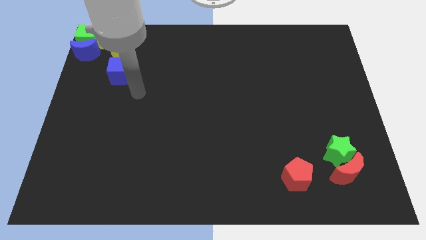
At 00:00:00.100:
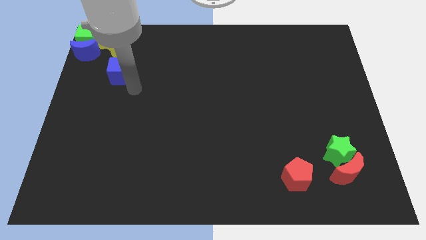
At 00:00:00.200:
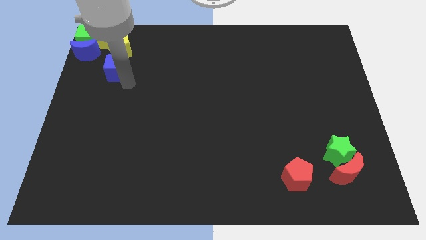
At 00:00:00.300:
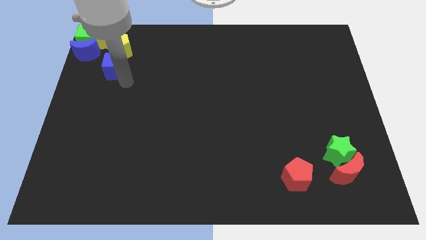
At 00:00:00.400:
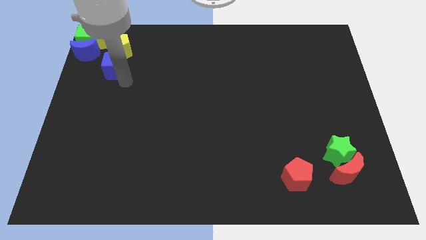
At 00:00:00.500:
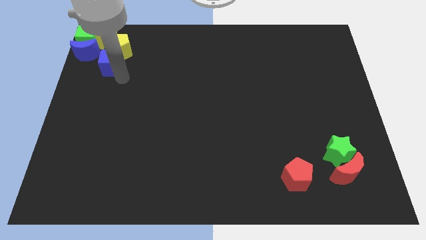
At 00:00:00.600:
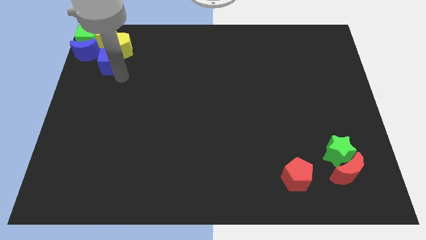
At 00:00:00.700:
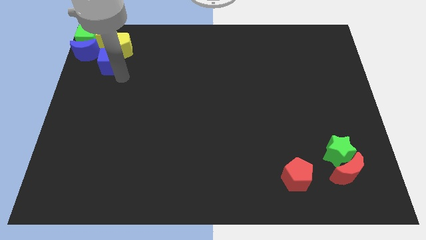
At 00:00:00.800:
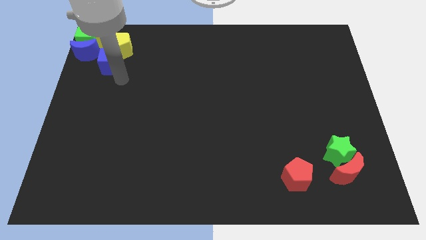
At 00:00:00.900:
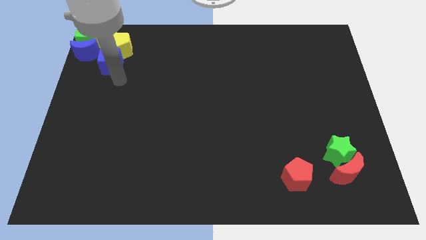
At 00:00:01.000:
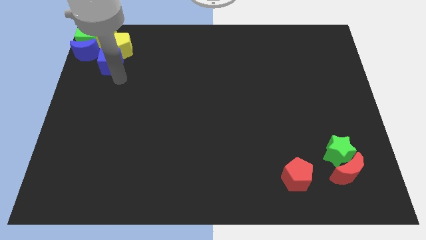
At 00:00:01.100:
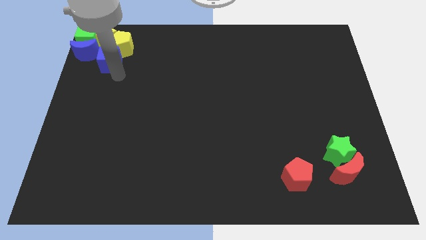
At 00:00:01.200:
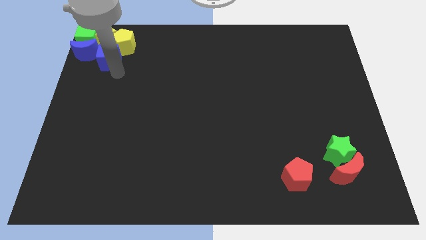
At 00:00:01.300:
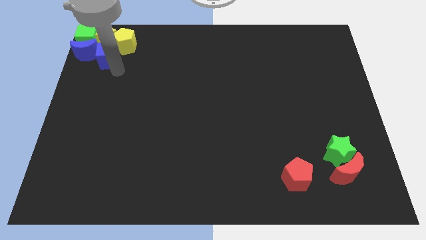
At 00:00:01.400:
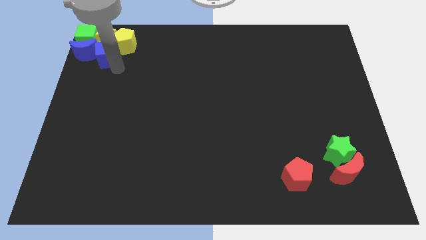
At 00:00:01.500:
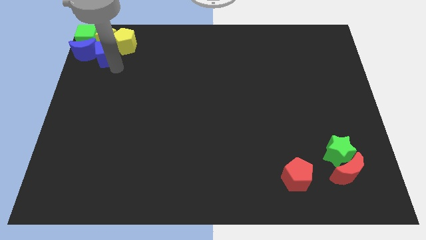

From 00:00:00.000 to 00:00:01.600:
move the blue cube under the yellow star

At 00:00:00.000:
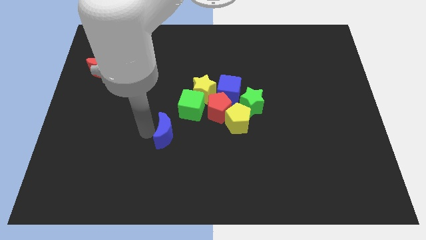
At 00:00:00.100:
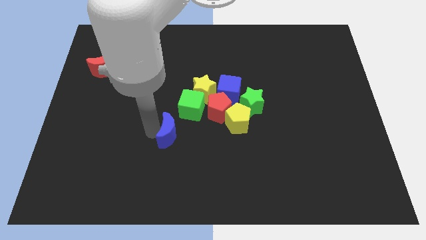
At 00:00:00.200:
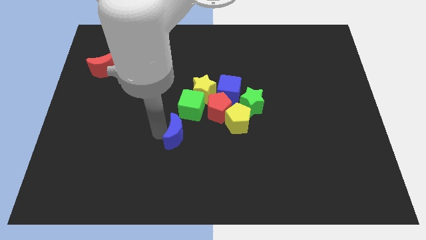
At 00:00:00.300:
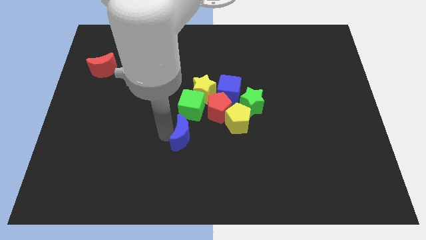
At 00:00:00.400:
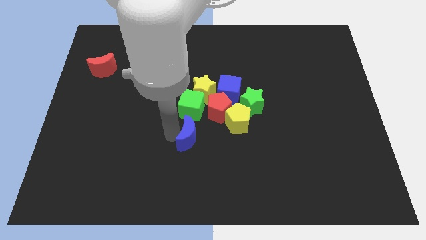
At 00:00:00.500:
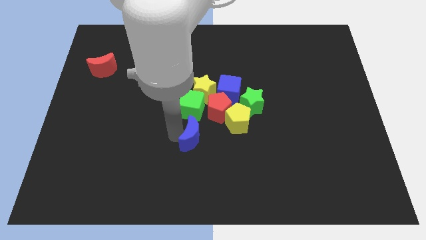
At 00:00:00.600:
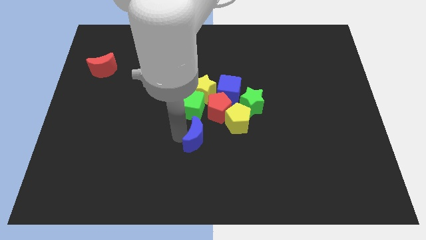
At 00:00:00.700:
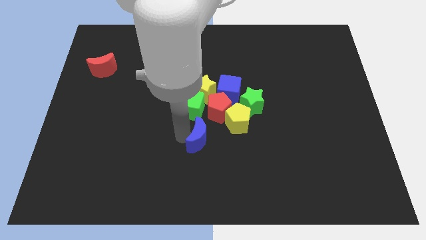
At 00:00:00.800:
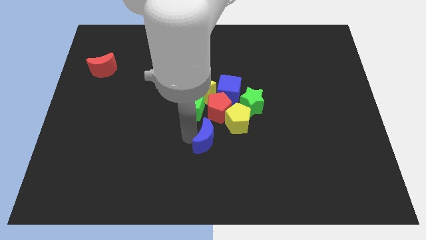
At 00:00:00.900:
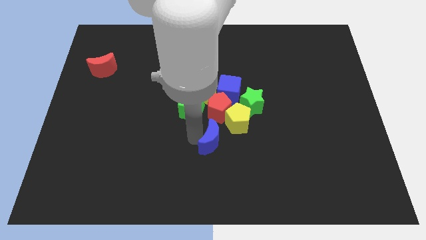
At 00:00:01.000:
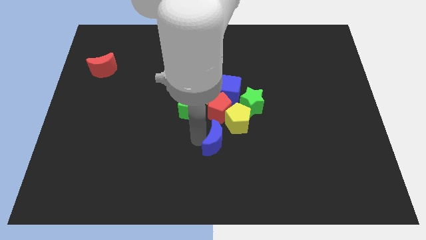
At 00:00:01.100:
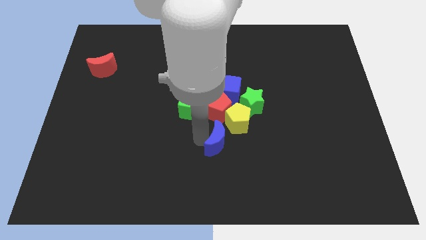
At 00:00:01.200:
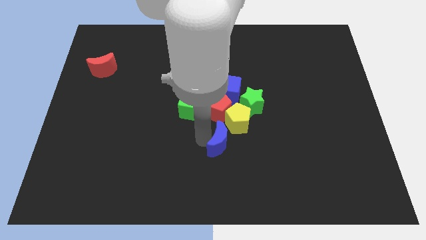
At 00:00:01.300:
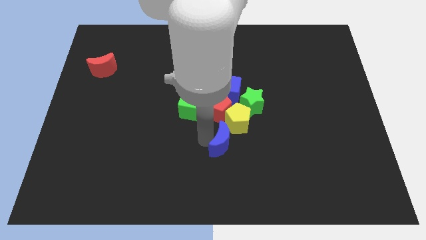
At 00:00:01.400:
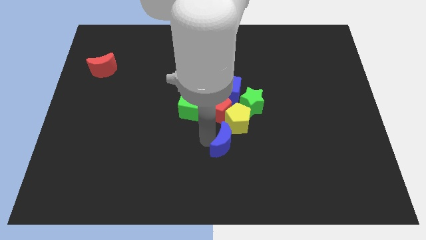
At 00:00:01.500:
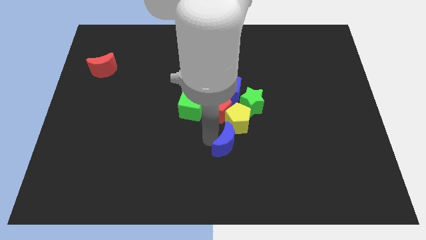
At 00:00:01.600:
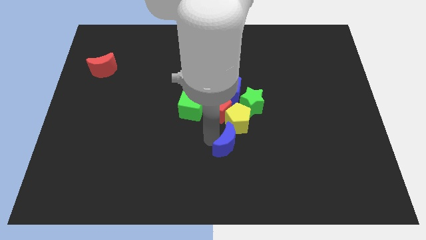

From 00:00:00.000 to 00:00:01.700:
place the blue crescent below yellow pentagon

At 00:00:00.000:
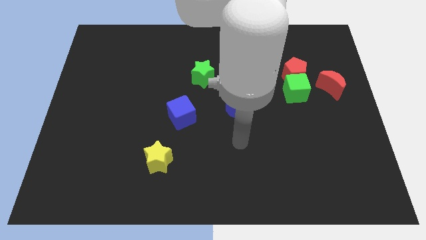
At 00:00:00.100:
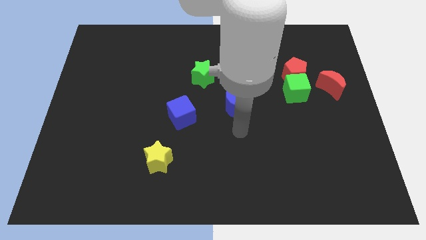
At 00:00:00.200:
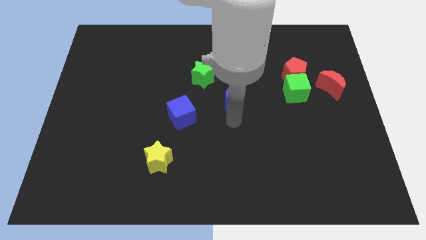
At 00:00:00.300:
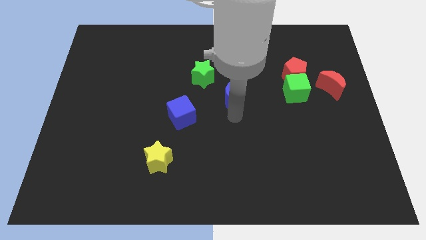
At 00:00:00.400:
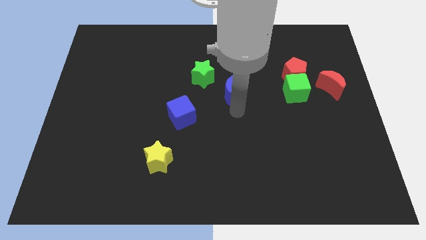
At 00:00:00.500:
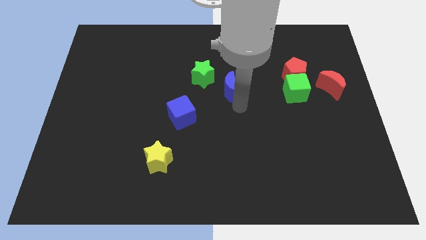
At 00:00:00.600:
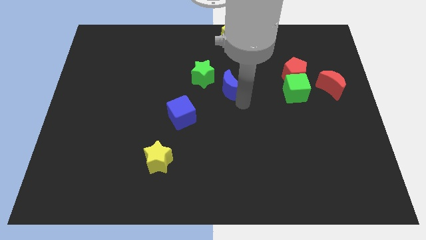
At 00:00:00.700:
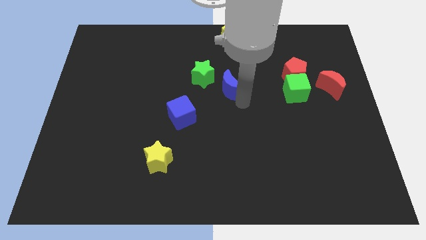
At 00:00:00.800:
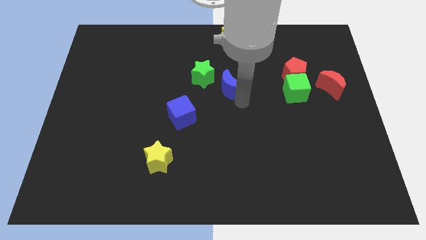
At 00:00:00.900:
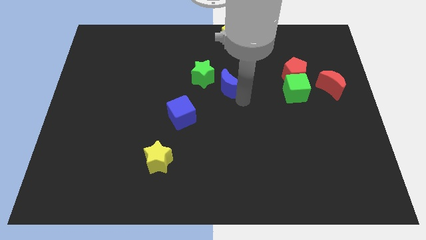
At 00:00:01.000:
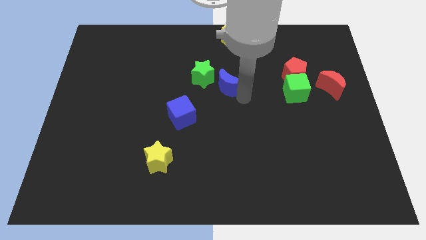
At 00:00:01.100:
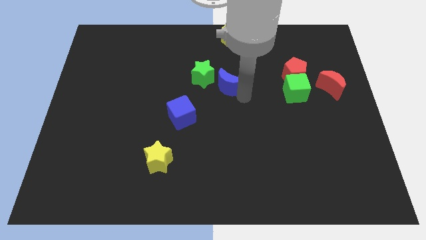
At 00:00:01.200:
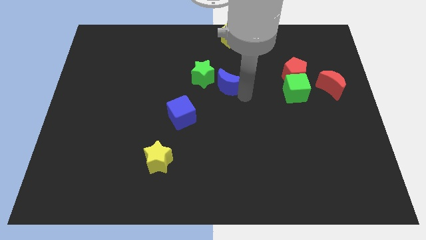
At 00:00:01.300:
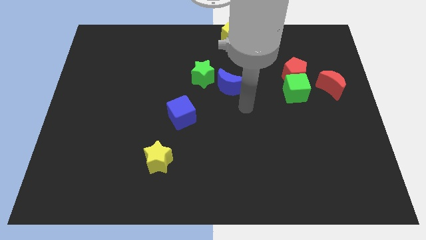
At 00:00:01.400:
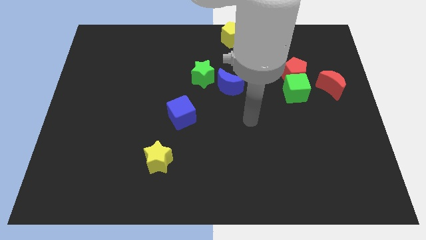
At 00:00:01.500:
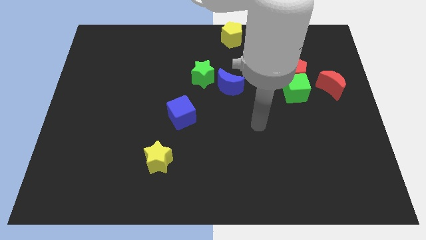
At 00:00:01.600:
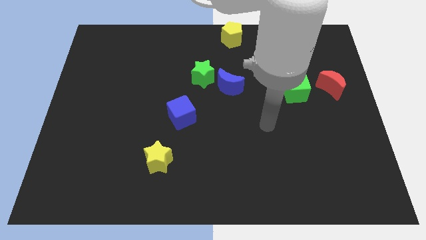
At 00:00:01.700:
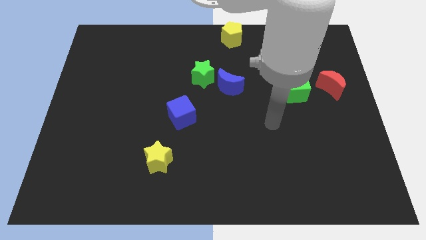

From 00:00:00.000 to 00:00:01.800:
push the blue moon slightly up

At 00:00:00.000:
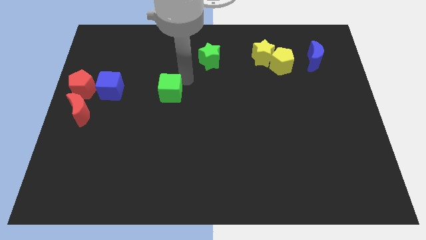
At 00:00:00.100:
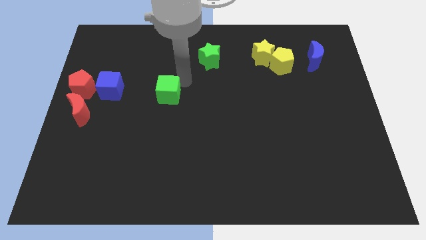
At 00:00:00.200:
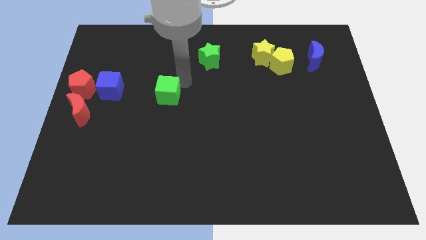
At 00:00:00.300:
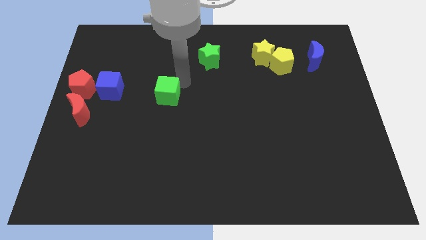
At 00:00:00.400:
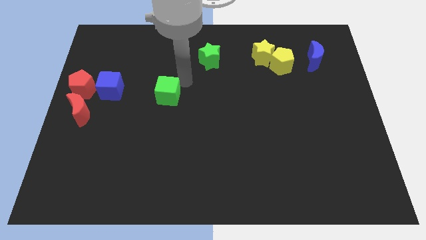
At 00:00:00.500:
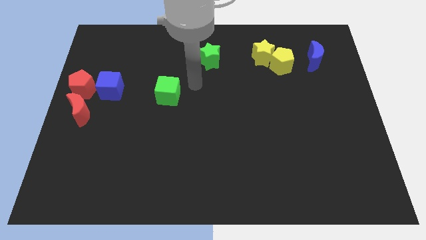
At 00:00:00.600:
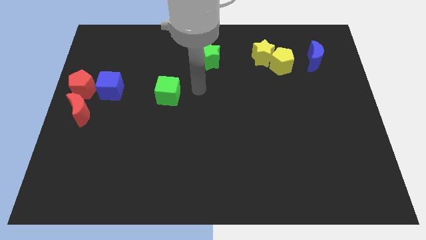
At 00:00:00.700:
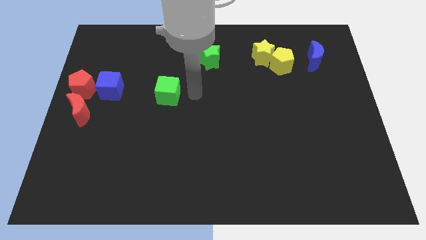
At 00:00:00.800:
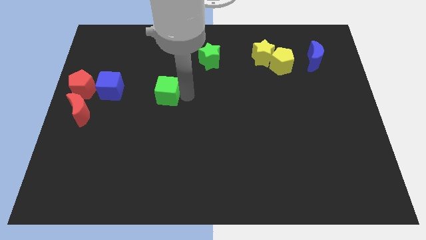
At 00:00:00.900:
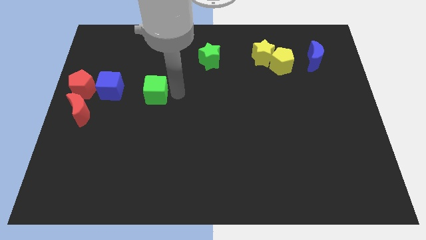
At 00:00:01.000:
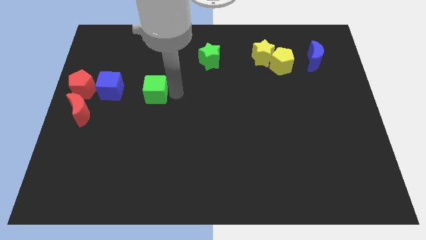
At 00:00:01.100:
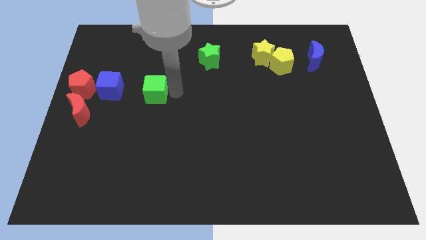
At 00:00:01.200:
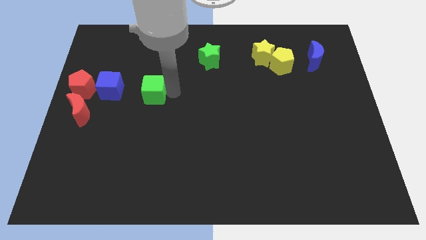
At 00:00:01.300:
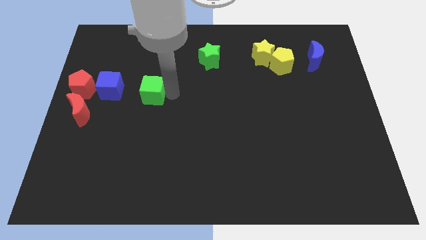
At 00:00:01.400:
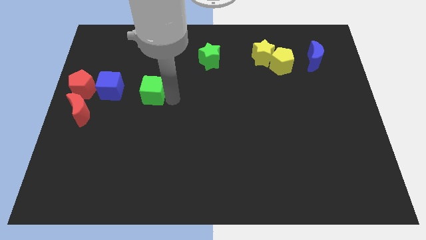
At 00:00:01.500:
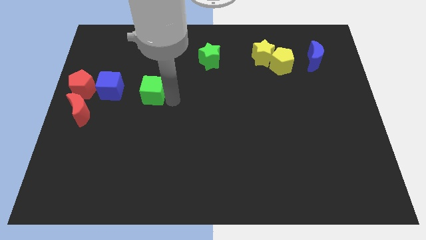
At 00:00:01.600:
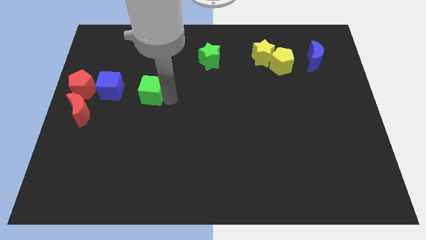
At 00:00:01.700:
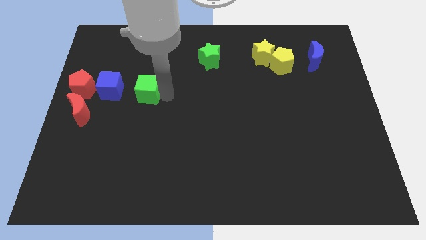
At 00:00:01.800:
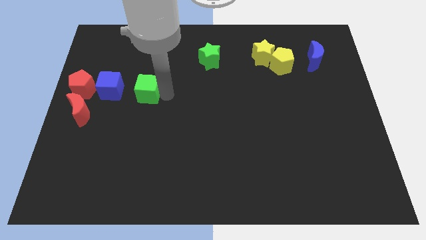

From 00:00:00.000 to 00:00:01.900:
move green cube towards blue cube

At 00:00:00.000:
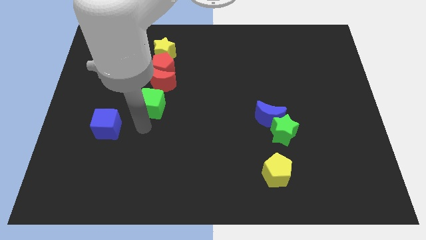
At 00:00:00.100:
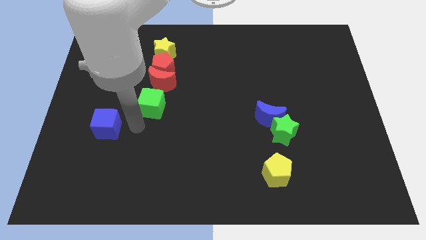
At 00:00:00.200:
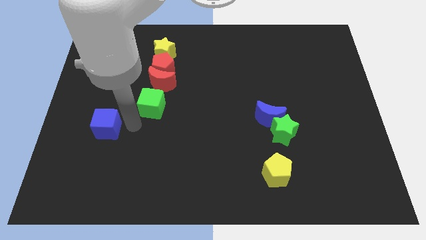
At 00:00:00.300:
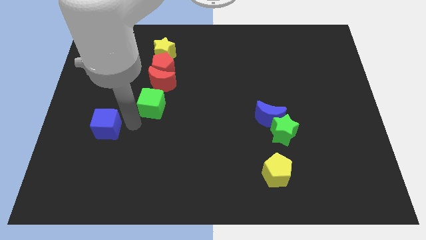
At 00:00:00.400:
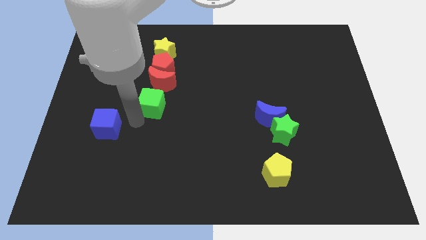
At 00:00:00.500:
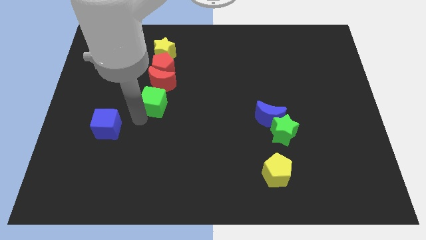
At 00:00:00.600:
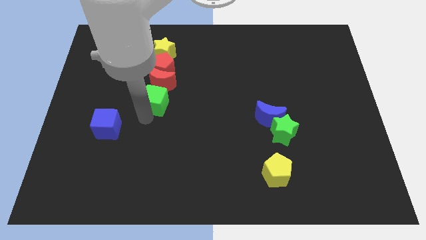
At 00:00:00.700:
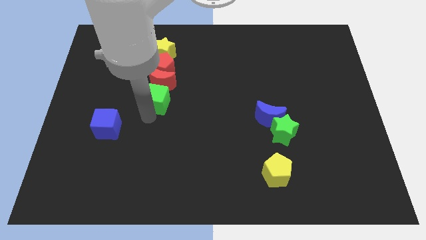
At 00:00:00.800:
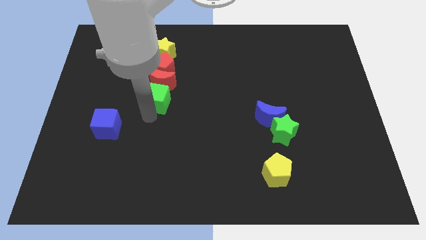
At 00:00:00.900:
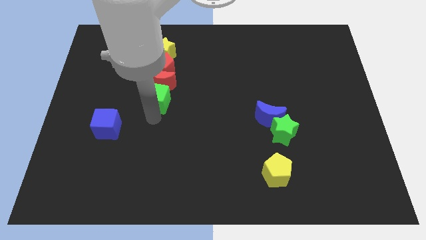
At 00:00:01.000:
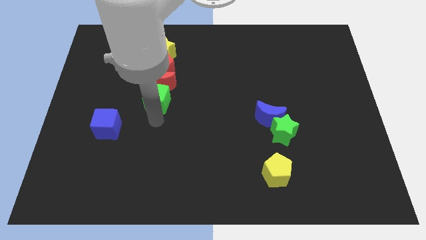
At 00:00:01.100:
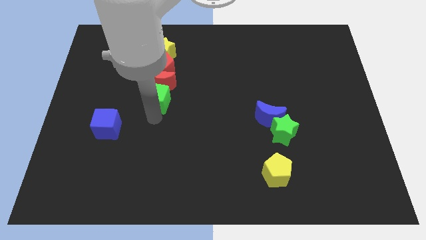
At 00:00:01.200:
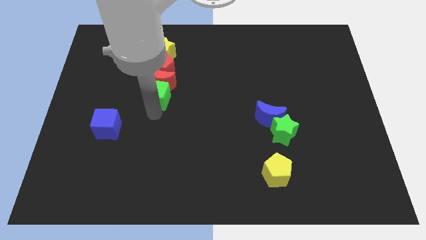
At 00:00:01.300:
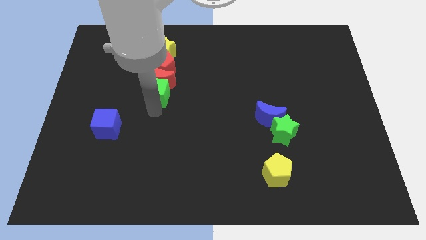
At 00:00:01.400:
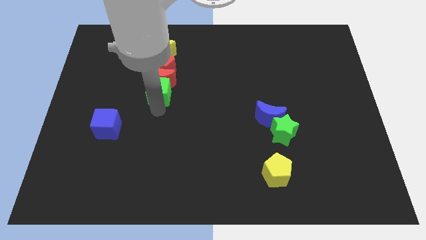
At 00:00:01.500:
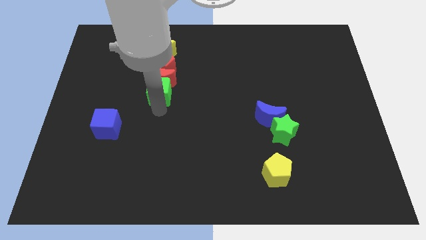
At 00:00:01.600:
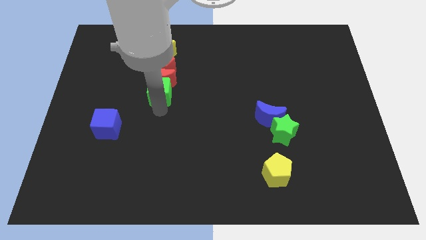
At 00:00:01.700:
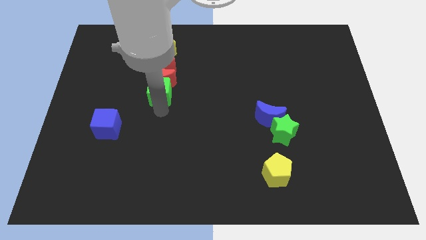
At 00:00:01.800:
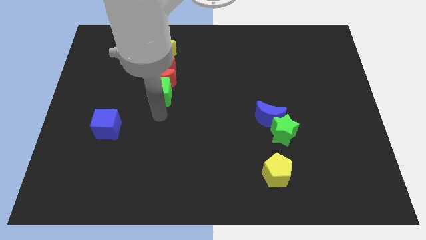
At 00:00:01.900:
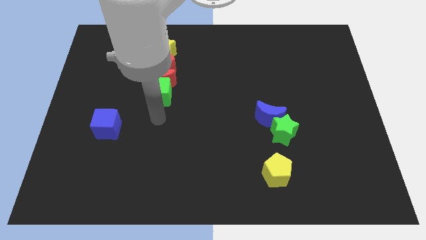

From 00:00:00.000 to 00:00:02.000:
push the green cube into the red moon
